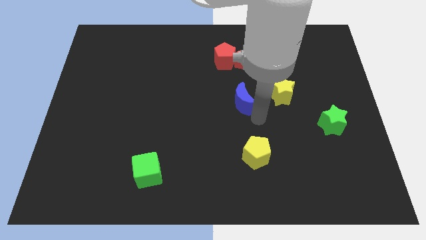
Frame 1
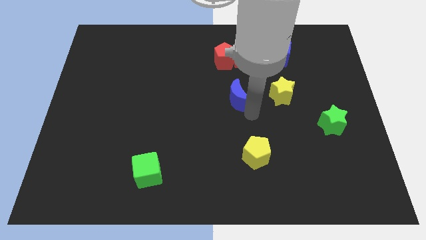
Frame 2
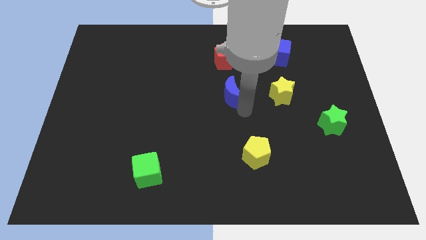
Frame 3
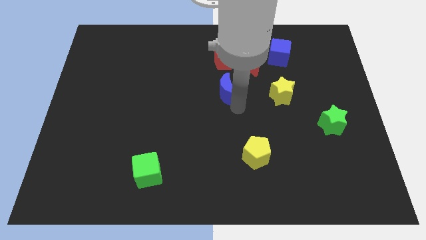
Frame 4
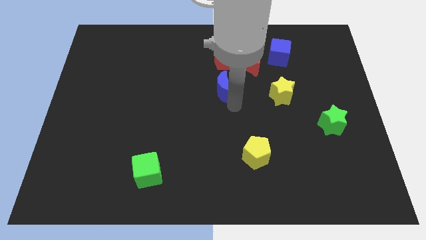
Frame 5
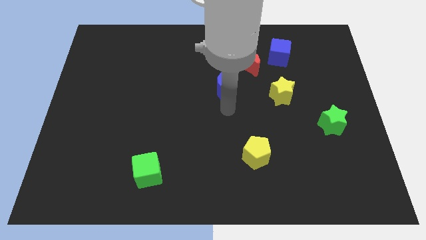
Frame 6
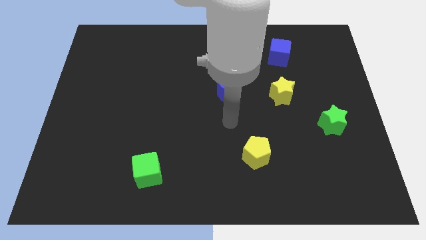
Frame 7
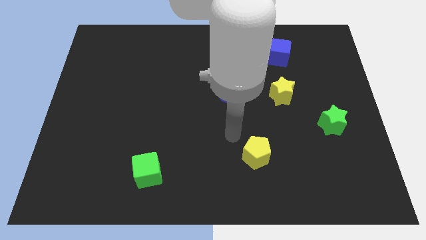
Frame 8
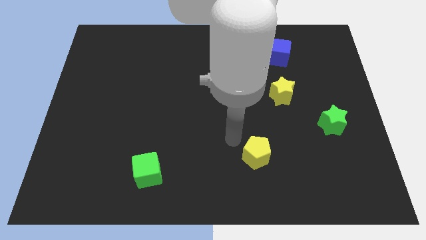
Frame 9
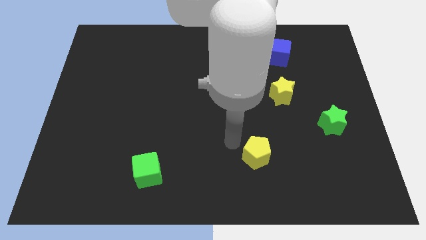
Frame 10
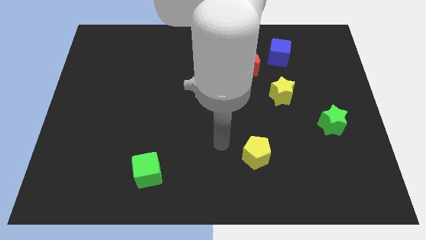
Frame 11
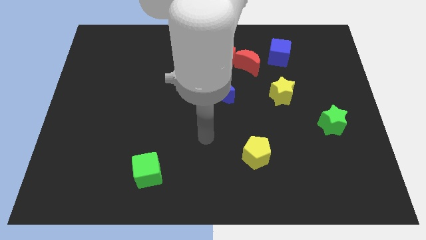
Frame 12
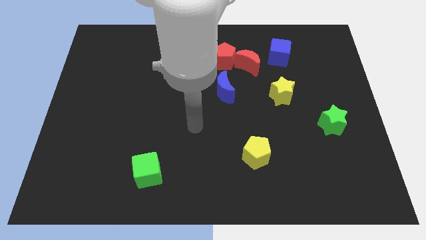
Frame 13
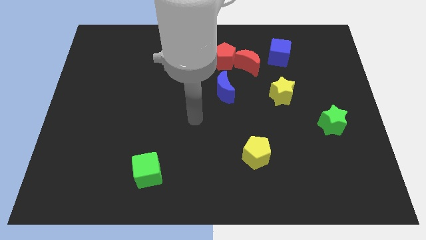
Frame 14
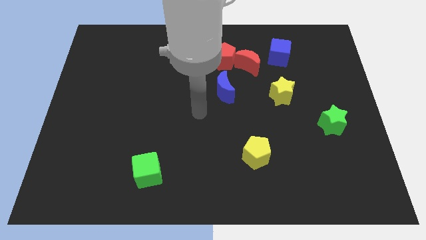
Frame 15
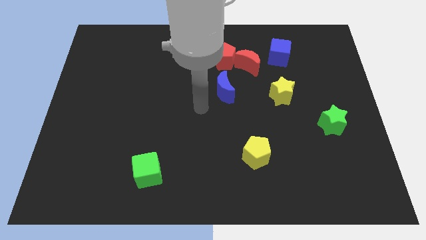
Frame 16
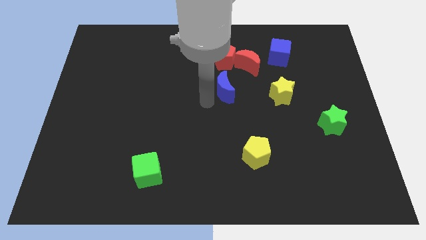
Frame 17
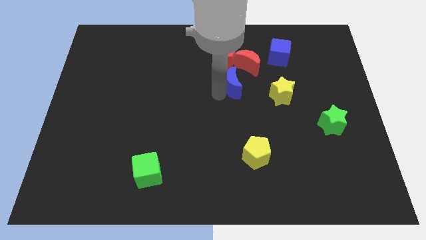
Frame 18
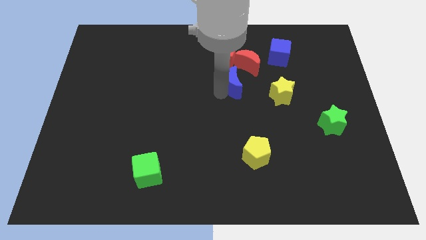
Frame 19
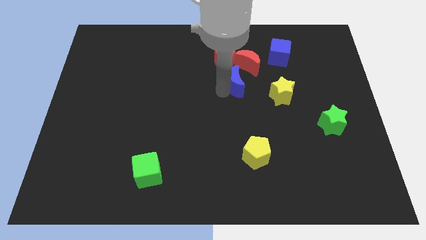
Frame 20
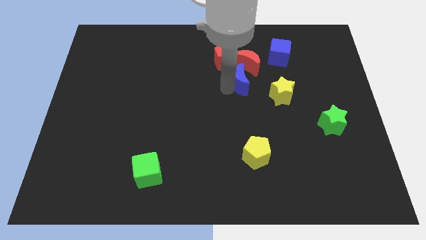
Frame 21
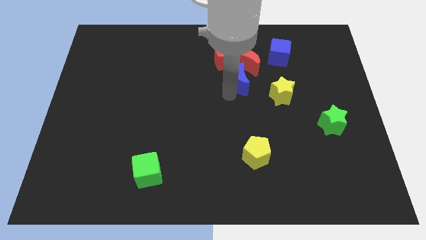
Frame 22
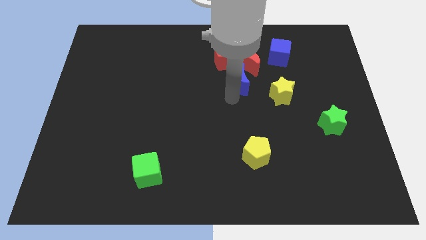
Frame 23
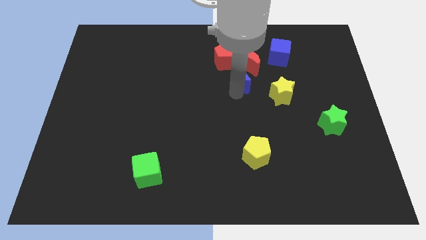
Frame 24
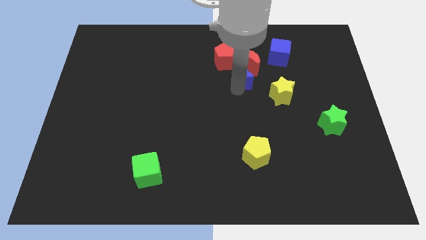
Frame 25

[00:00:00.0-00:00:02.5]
move blue crescent close to the red crescent

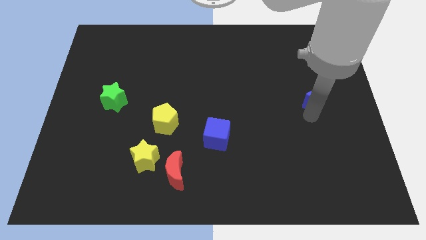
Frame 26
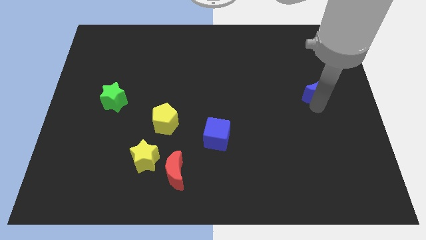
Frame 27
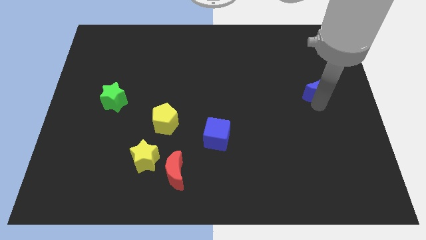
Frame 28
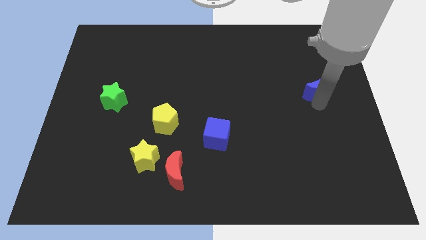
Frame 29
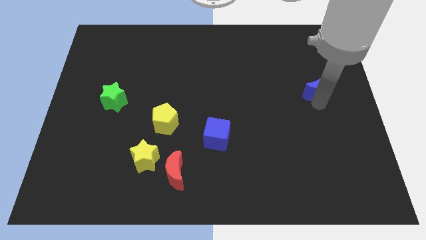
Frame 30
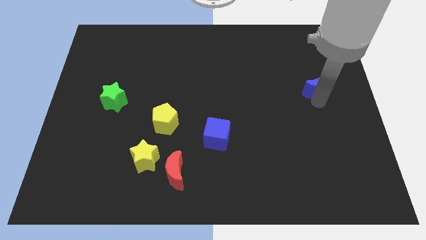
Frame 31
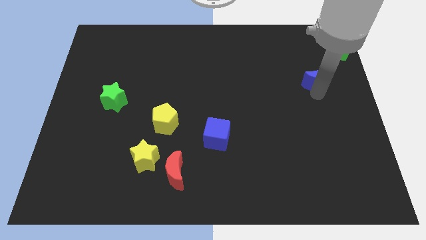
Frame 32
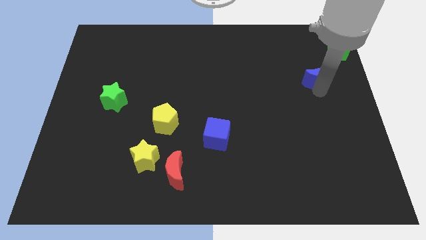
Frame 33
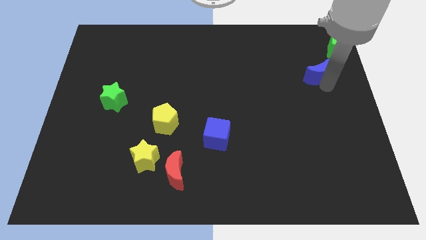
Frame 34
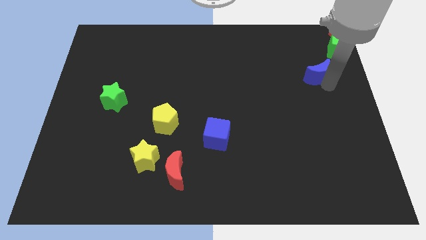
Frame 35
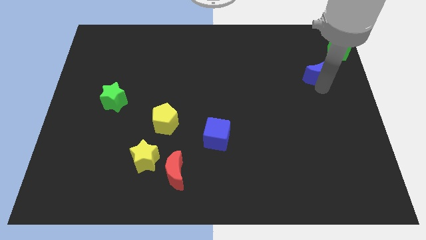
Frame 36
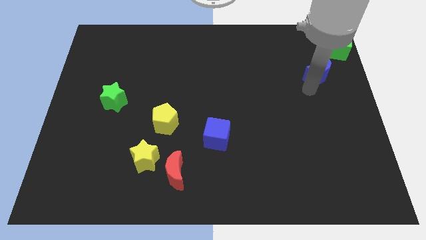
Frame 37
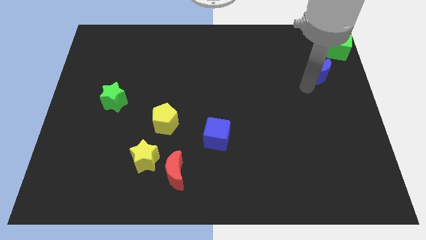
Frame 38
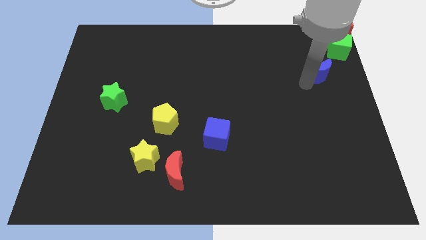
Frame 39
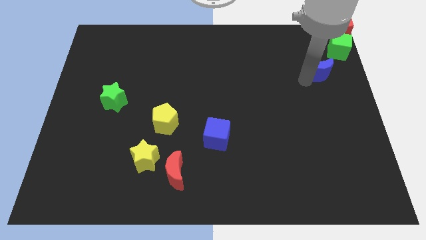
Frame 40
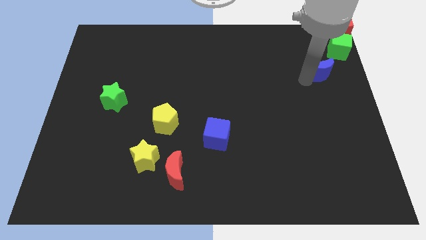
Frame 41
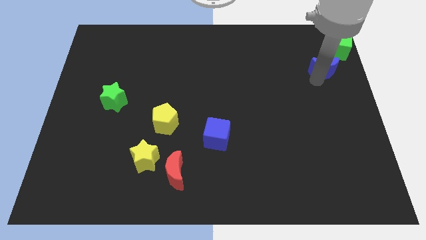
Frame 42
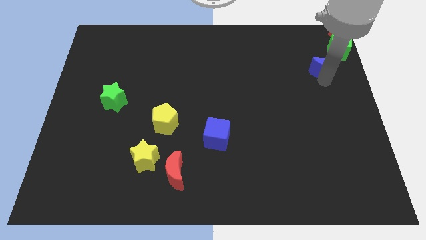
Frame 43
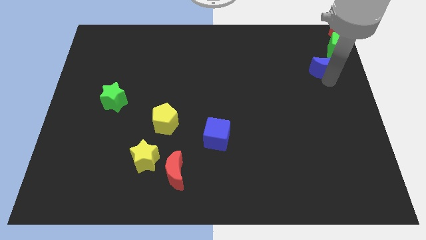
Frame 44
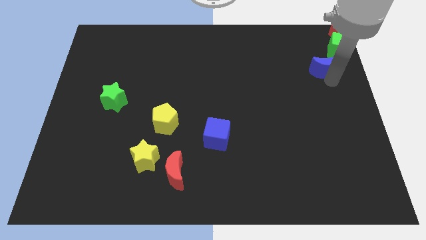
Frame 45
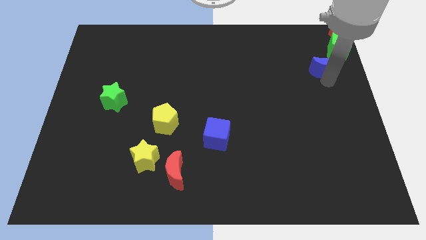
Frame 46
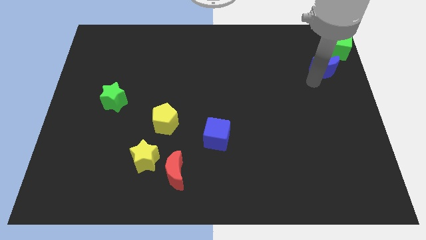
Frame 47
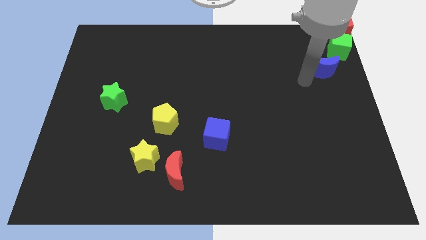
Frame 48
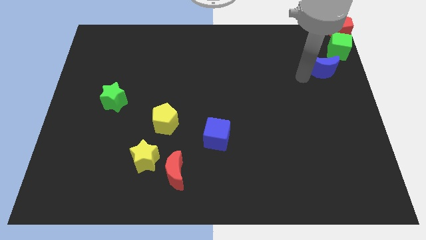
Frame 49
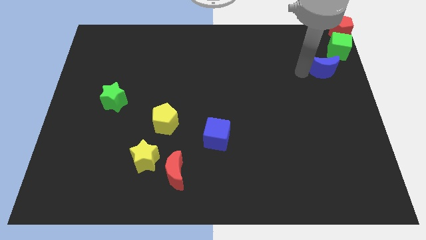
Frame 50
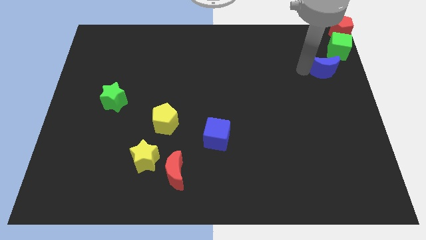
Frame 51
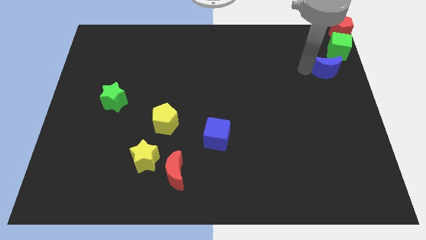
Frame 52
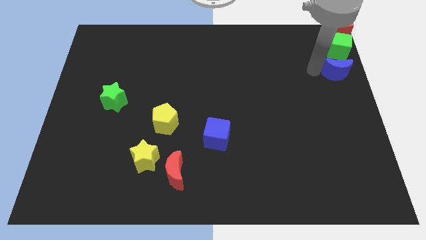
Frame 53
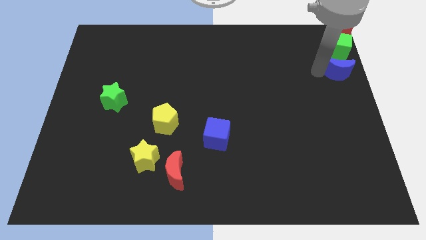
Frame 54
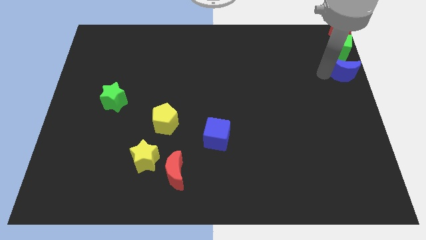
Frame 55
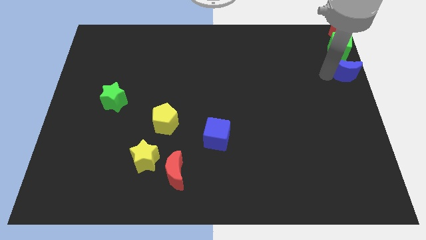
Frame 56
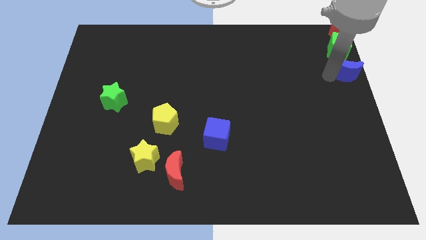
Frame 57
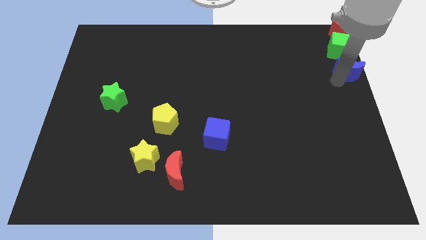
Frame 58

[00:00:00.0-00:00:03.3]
push the blue moon close to the green cube

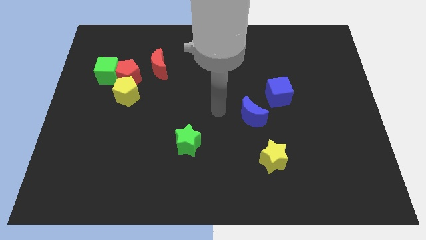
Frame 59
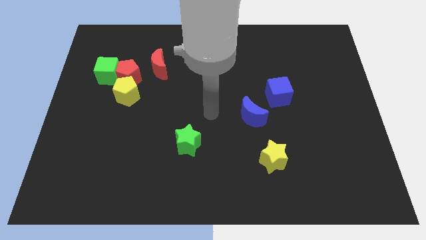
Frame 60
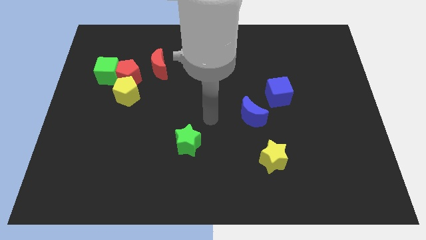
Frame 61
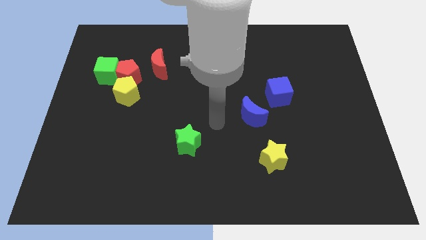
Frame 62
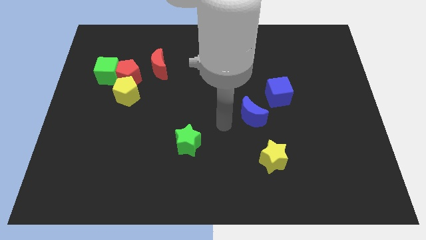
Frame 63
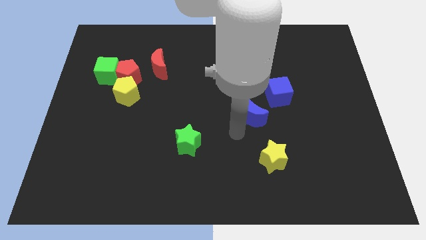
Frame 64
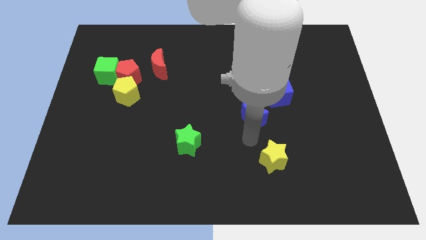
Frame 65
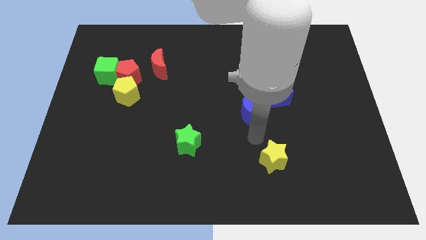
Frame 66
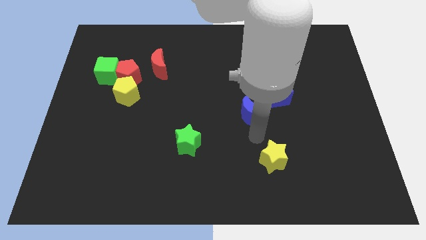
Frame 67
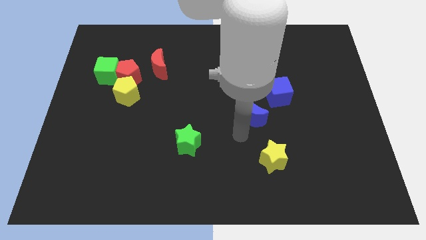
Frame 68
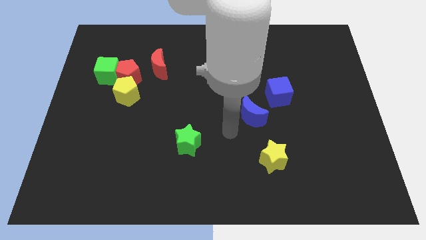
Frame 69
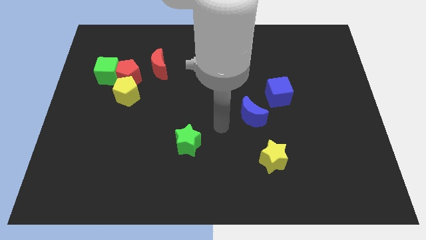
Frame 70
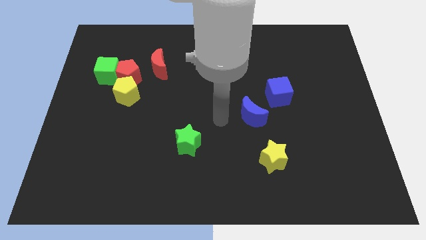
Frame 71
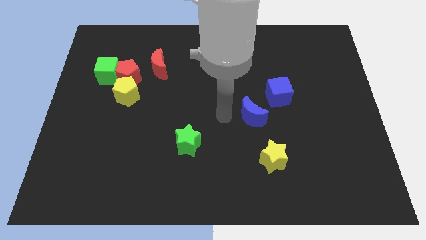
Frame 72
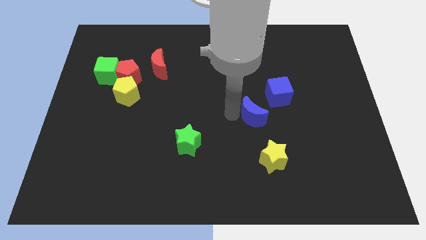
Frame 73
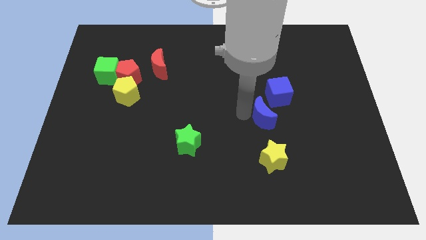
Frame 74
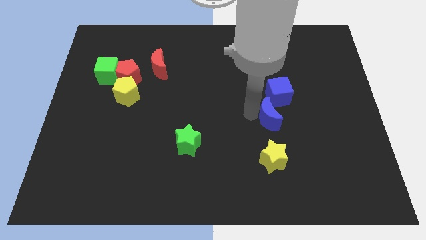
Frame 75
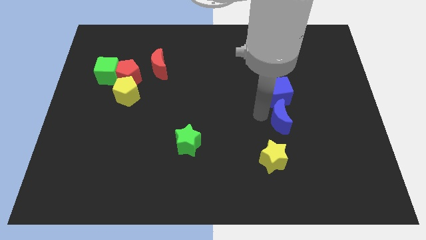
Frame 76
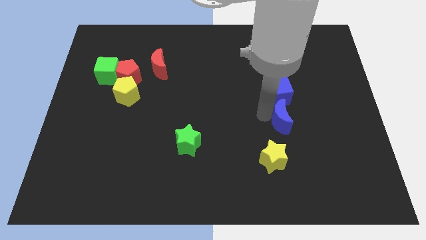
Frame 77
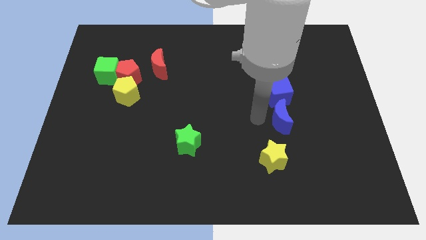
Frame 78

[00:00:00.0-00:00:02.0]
move the blue moon vertically below the blue cube

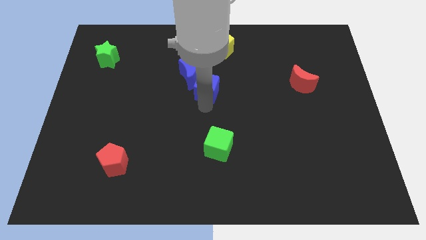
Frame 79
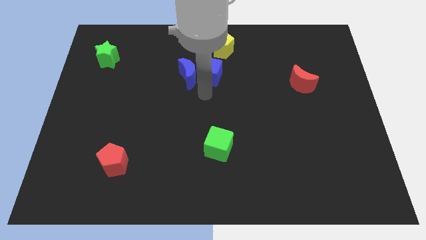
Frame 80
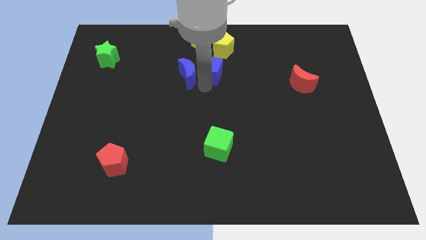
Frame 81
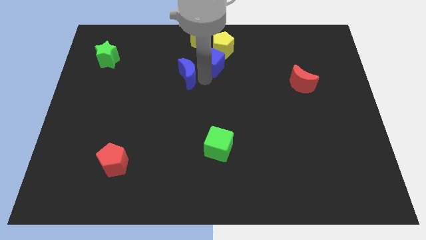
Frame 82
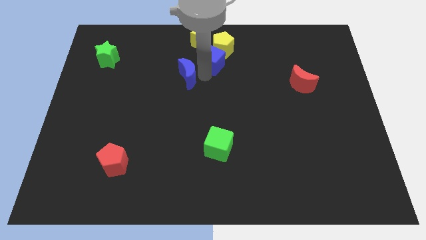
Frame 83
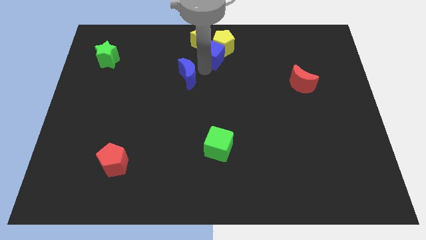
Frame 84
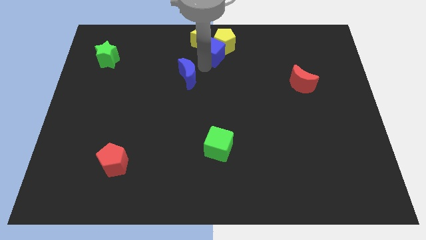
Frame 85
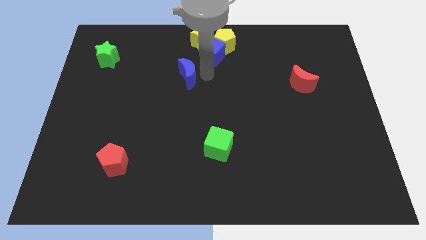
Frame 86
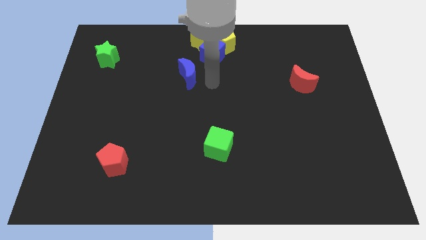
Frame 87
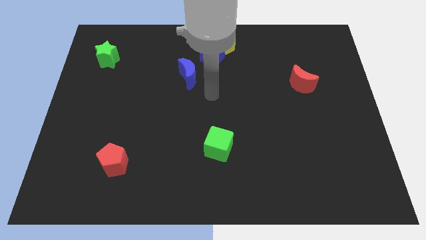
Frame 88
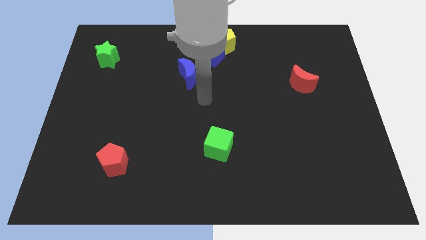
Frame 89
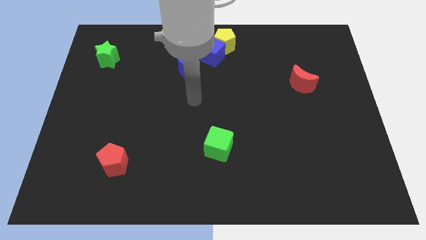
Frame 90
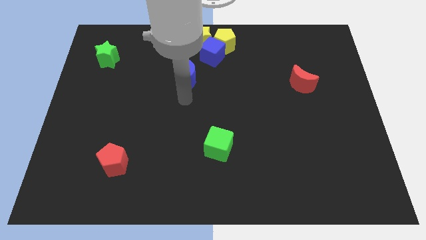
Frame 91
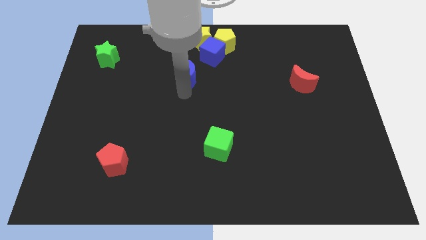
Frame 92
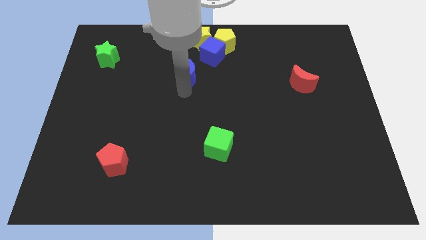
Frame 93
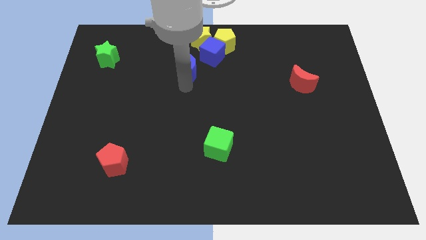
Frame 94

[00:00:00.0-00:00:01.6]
push the blue cube into the yellow pentagon
